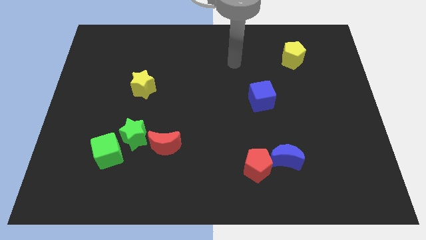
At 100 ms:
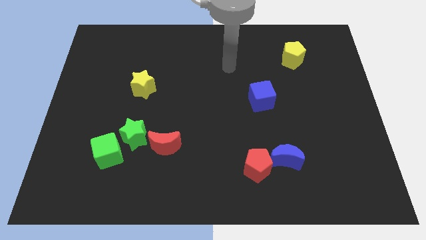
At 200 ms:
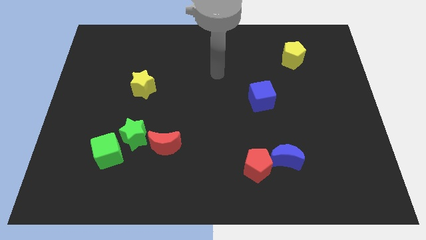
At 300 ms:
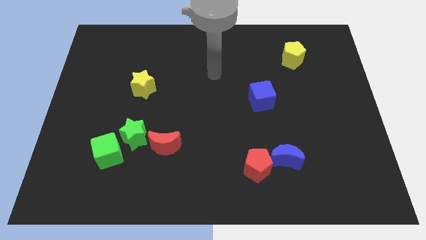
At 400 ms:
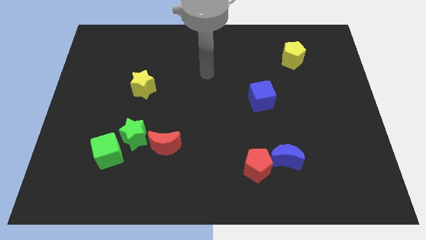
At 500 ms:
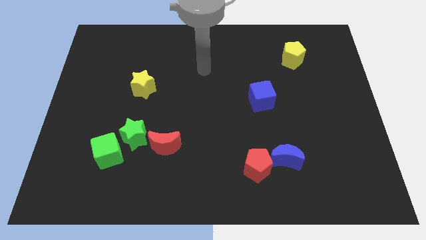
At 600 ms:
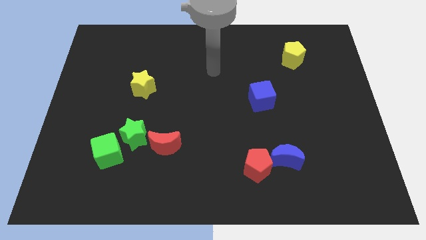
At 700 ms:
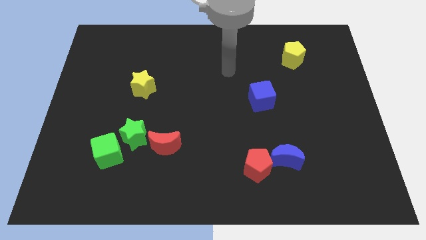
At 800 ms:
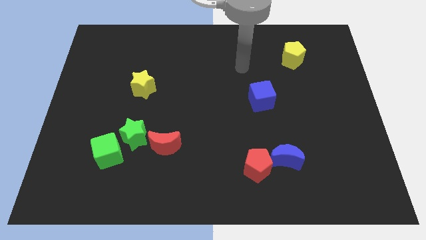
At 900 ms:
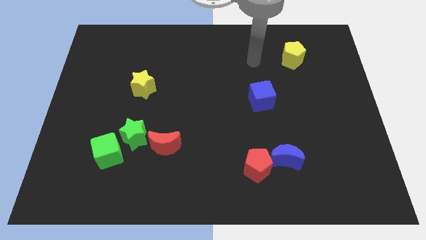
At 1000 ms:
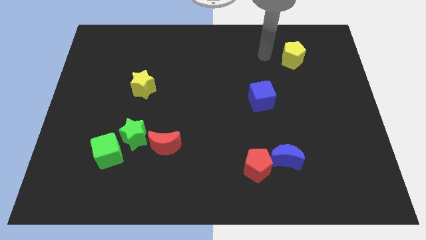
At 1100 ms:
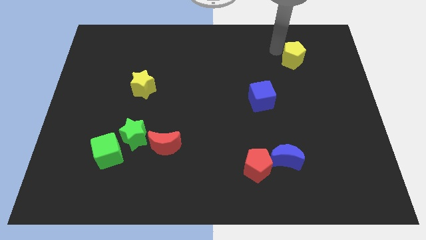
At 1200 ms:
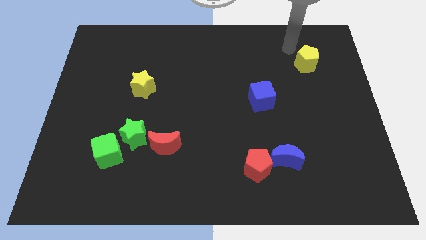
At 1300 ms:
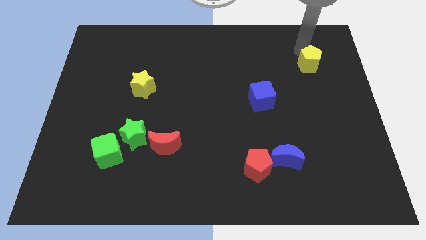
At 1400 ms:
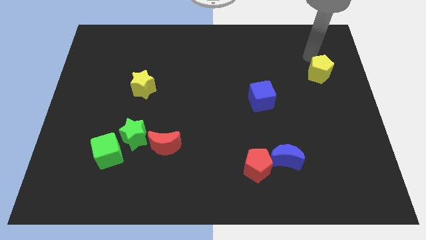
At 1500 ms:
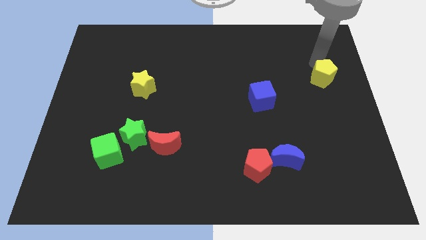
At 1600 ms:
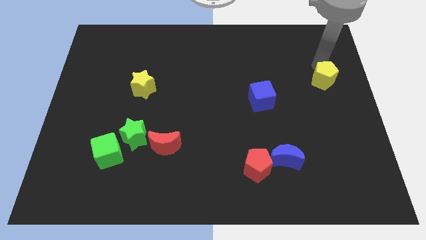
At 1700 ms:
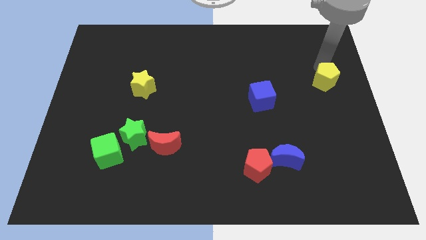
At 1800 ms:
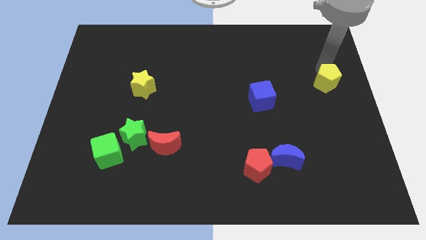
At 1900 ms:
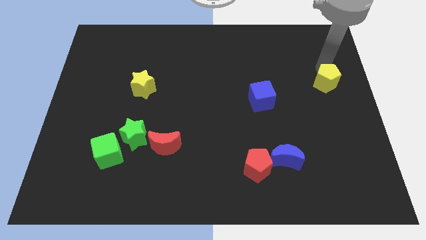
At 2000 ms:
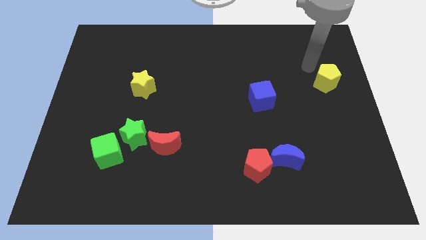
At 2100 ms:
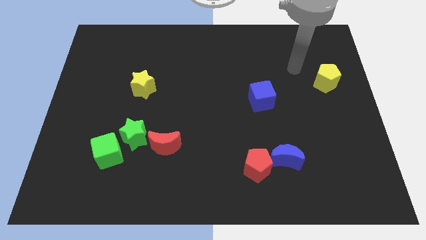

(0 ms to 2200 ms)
push the yellow pentagon parallel to the right side of the yellow star

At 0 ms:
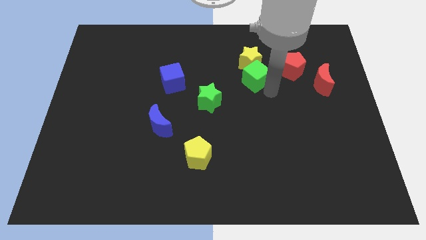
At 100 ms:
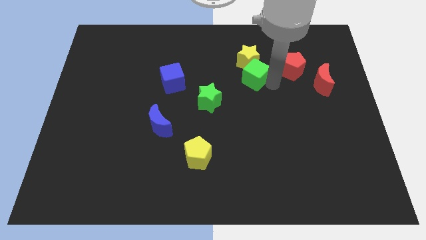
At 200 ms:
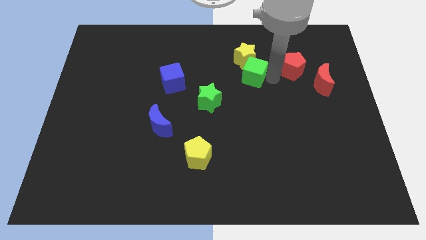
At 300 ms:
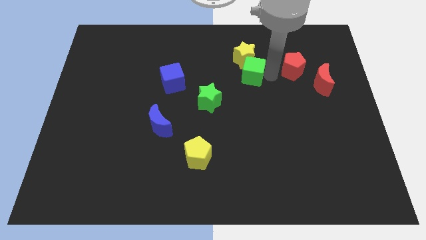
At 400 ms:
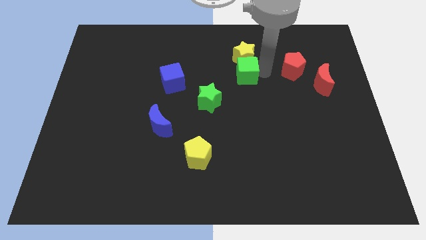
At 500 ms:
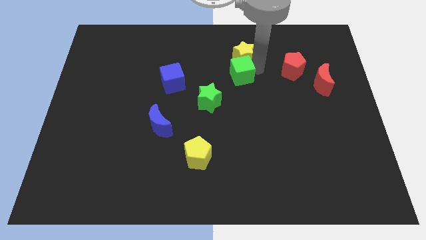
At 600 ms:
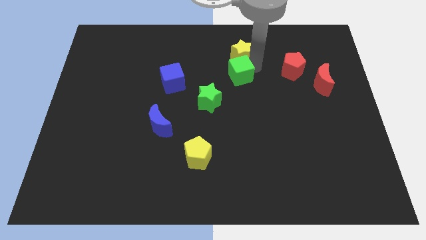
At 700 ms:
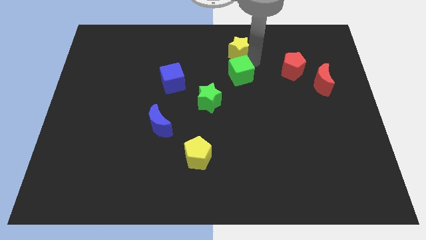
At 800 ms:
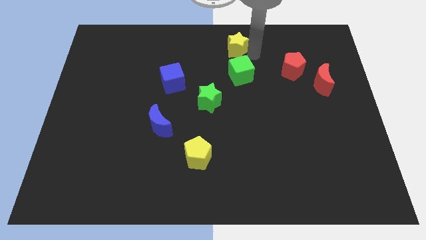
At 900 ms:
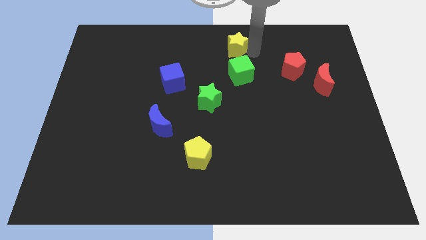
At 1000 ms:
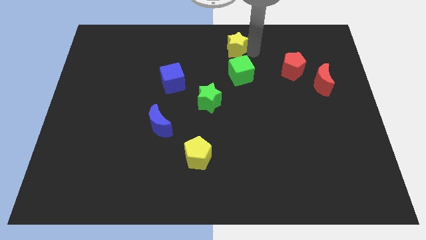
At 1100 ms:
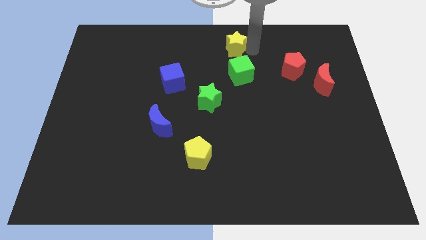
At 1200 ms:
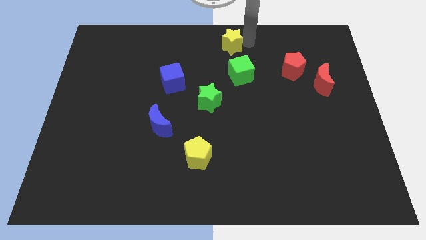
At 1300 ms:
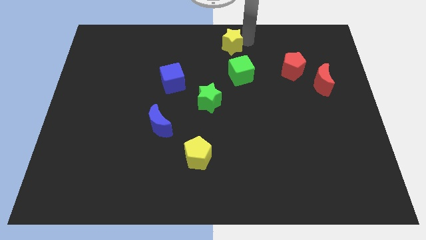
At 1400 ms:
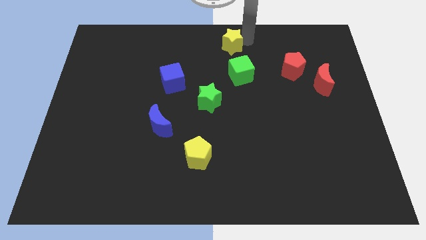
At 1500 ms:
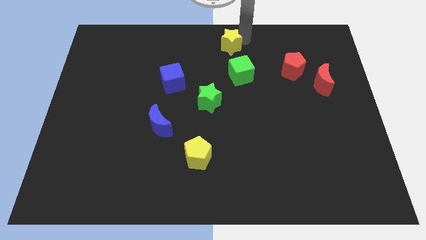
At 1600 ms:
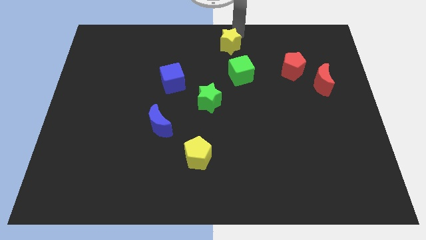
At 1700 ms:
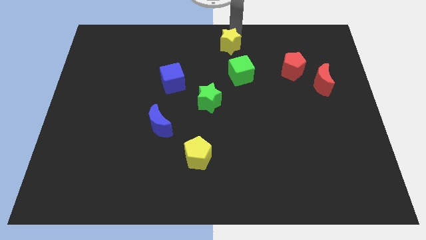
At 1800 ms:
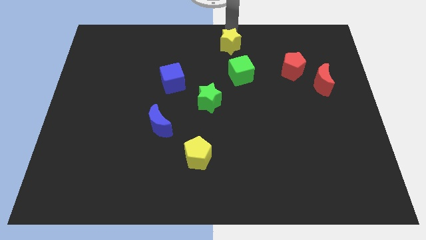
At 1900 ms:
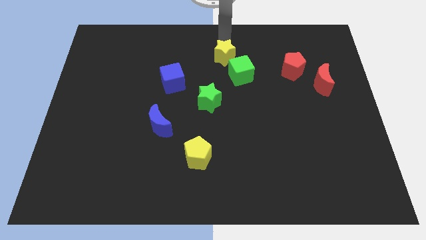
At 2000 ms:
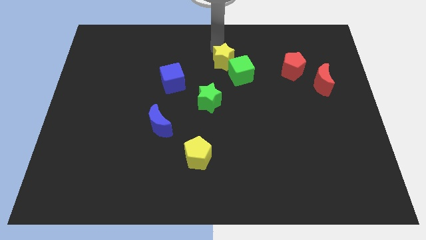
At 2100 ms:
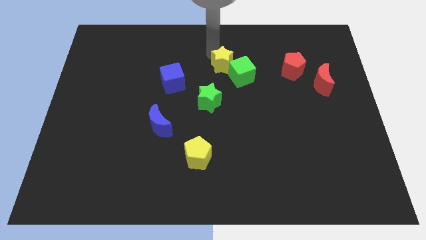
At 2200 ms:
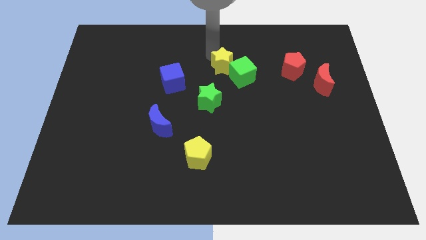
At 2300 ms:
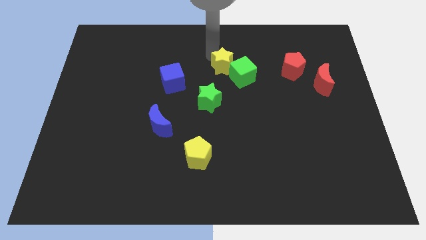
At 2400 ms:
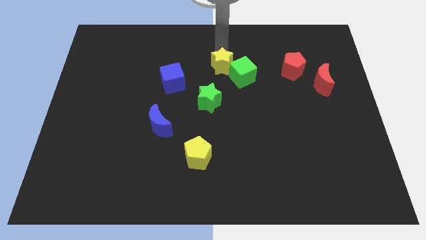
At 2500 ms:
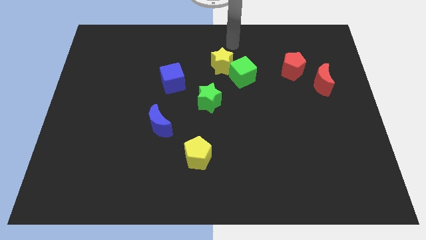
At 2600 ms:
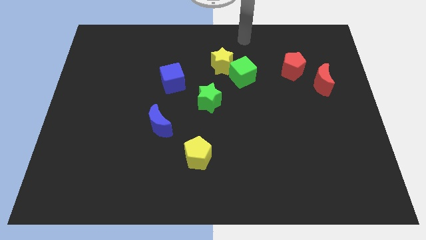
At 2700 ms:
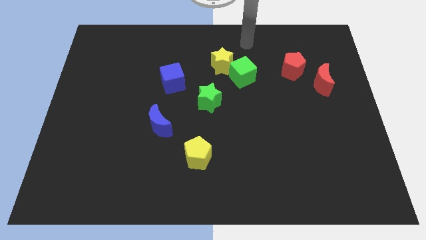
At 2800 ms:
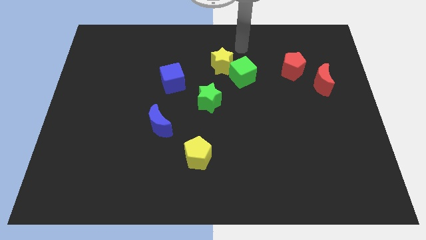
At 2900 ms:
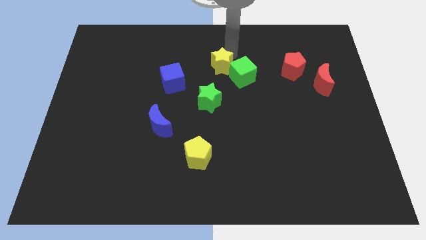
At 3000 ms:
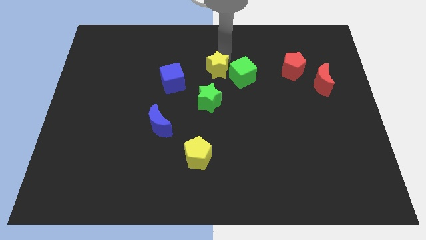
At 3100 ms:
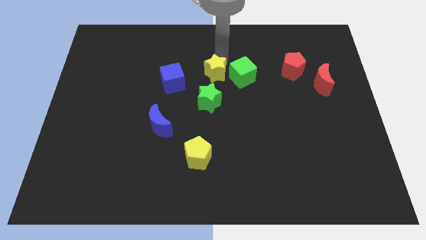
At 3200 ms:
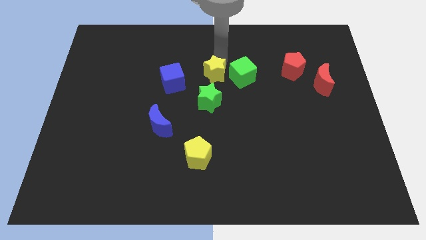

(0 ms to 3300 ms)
place the yellow star above the green star

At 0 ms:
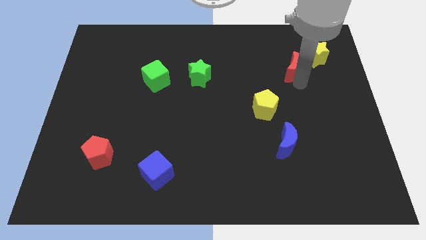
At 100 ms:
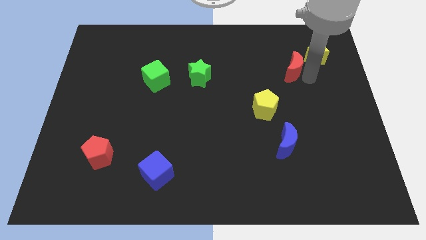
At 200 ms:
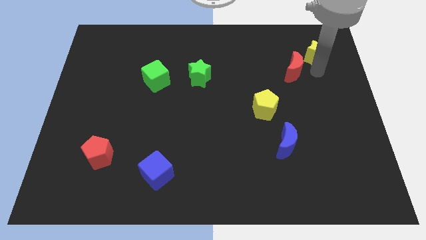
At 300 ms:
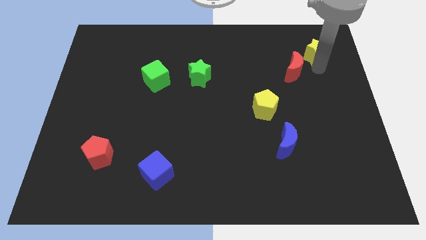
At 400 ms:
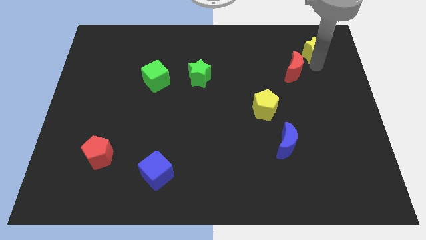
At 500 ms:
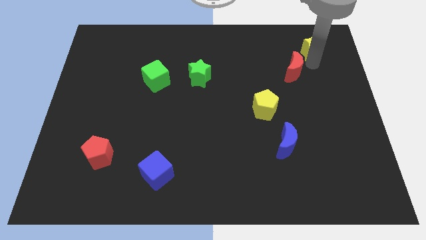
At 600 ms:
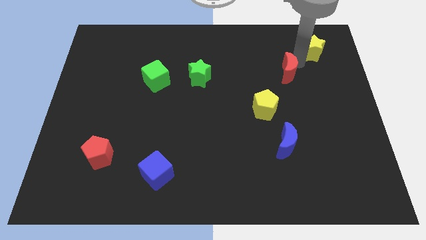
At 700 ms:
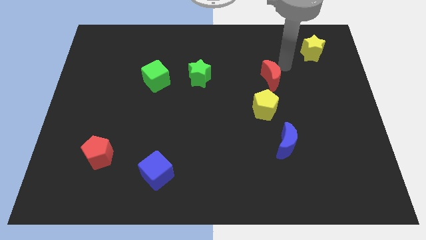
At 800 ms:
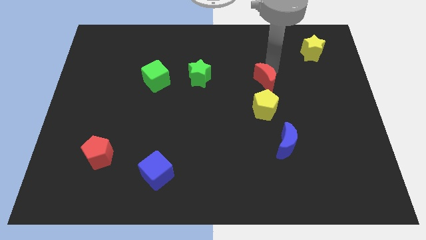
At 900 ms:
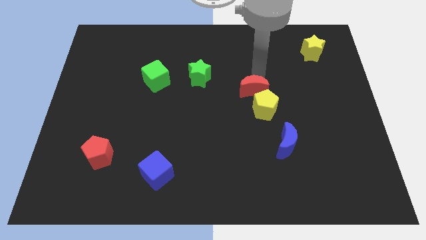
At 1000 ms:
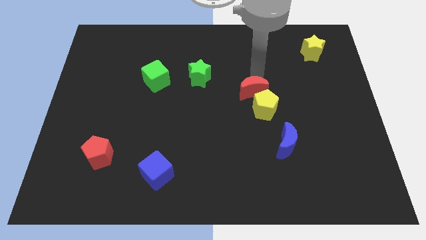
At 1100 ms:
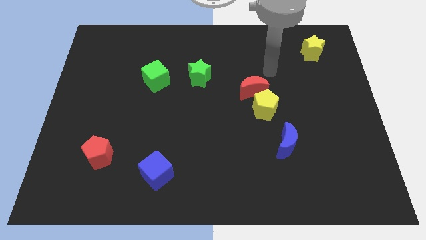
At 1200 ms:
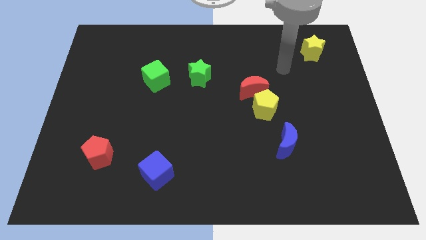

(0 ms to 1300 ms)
push red moon into yellow pentagon

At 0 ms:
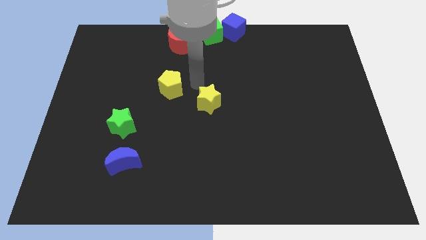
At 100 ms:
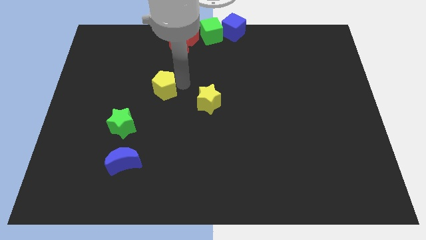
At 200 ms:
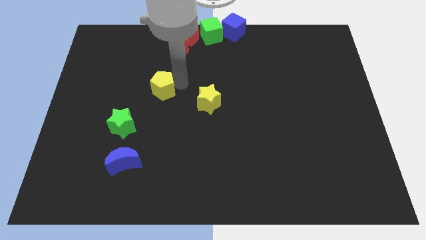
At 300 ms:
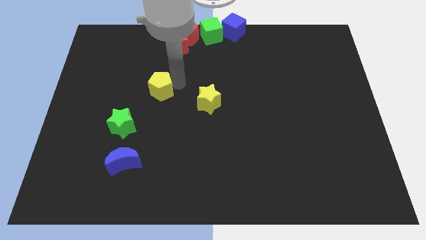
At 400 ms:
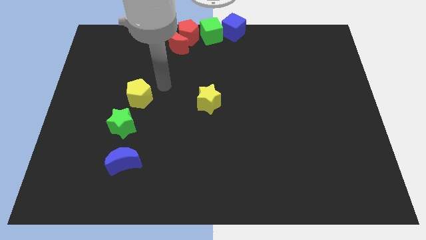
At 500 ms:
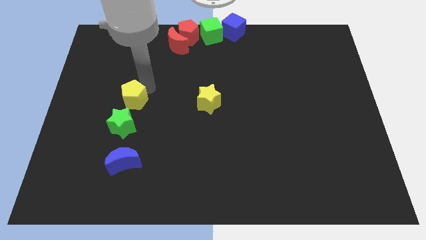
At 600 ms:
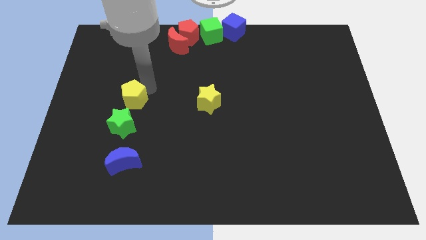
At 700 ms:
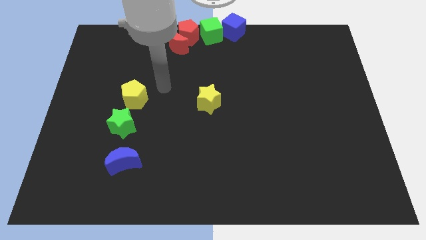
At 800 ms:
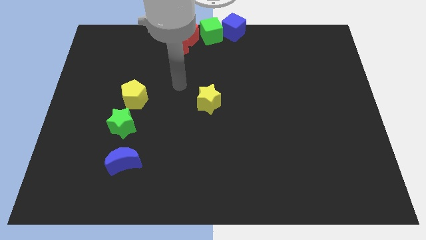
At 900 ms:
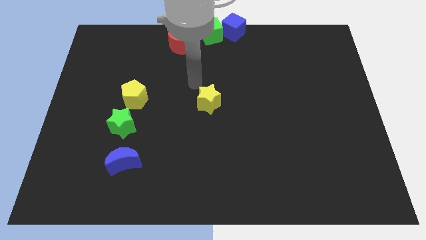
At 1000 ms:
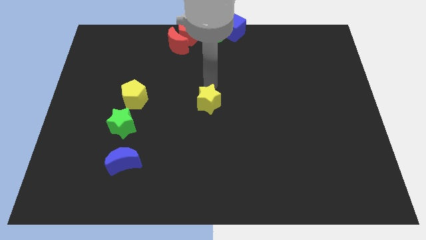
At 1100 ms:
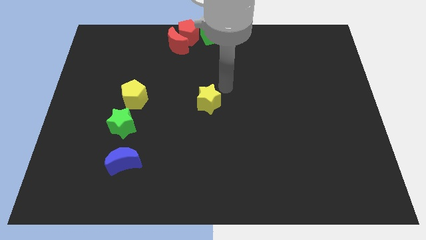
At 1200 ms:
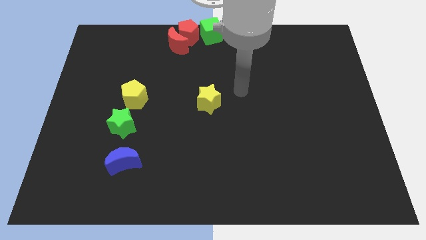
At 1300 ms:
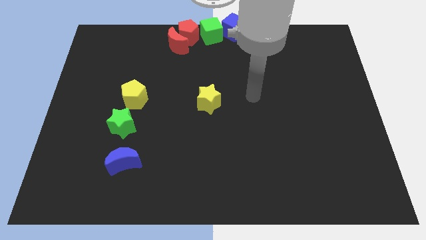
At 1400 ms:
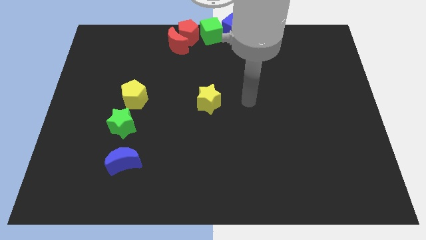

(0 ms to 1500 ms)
push yellow pentagon slightly towards the left side of the board

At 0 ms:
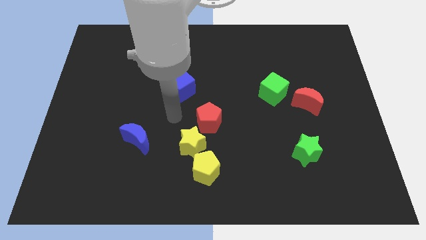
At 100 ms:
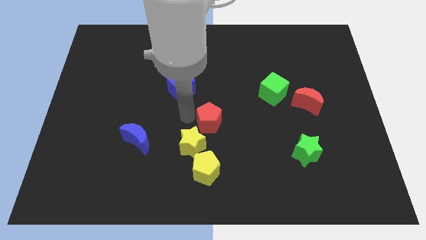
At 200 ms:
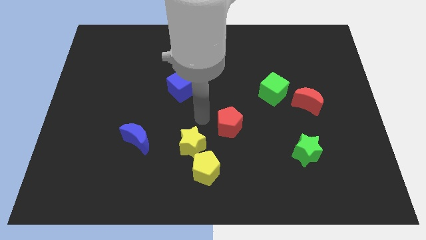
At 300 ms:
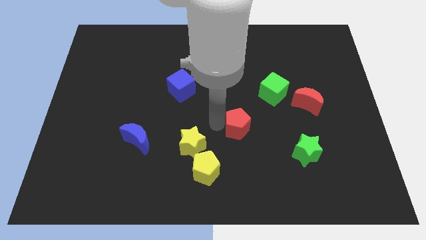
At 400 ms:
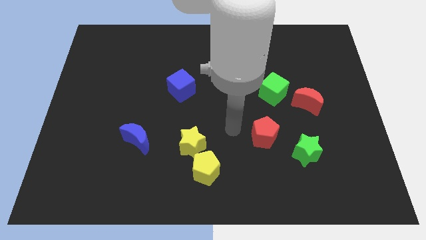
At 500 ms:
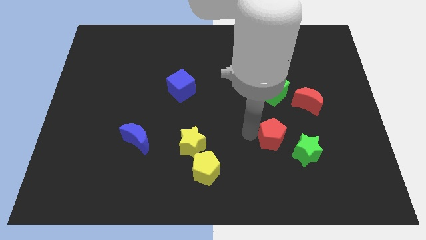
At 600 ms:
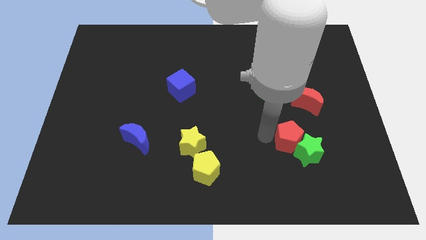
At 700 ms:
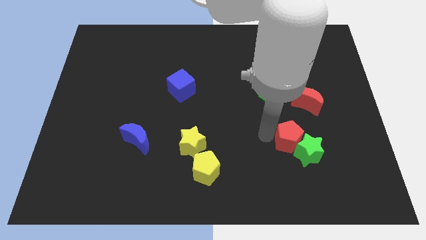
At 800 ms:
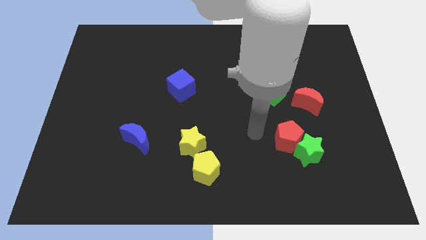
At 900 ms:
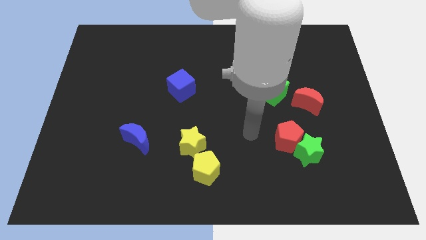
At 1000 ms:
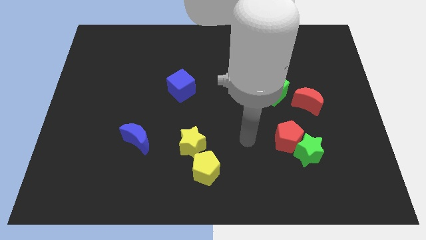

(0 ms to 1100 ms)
push red pentagon in to green star
